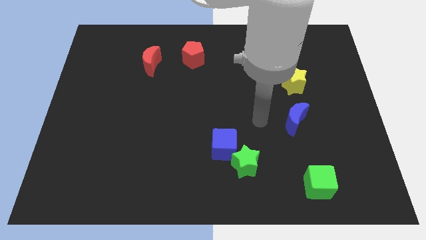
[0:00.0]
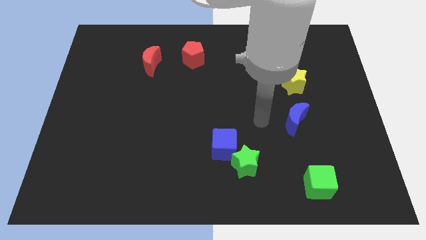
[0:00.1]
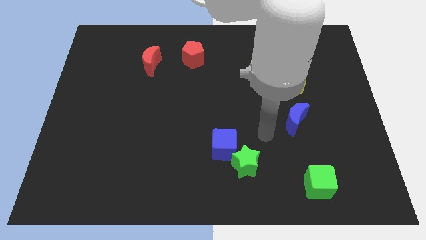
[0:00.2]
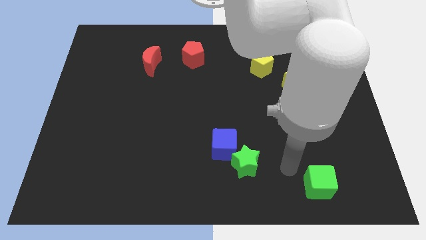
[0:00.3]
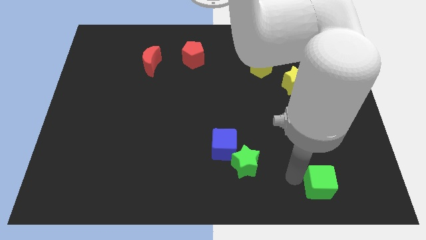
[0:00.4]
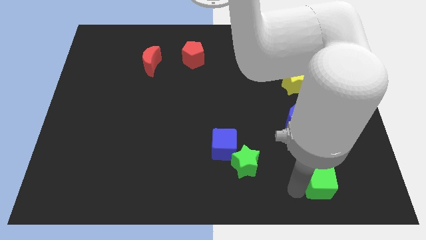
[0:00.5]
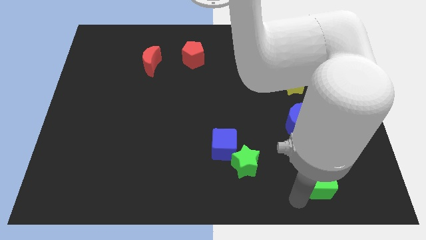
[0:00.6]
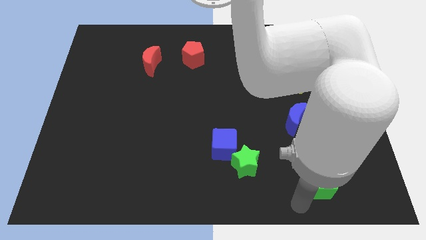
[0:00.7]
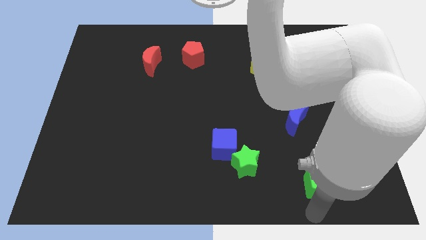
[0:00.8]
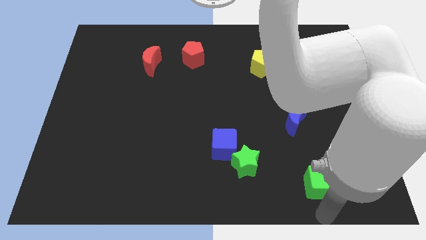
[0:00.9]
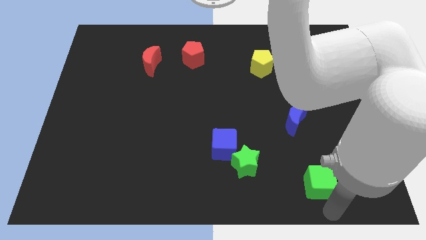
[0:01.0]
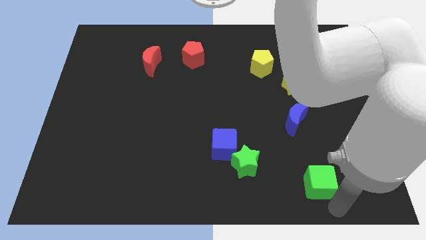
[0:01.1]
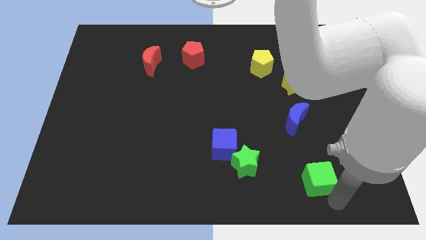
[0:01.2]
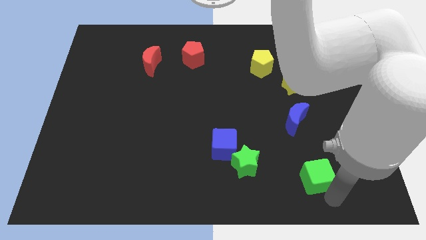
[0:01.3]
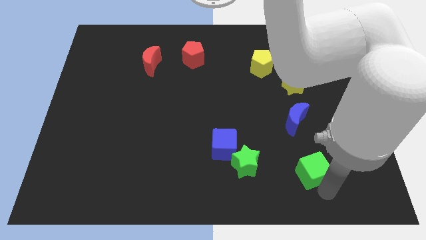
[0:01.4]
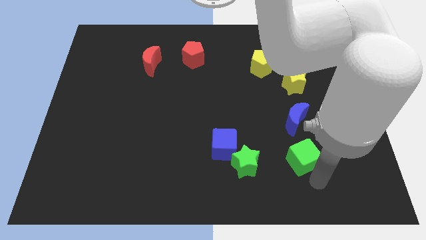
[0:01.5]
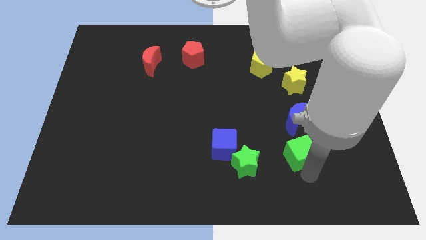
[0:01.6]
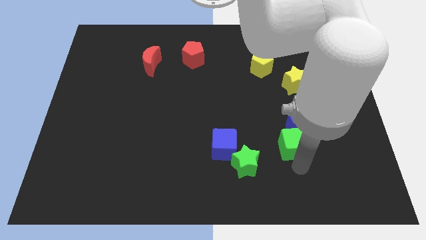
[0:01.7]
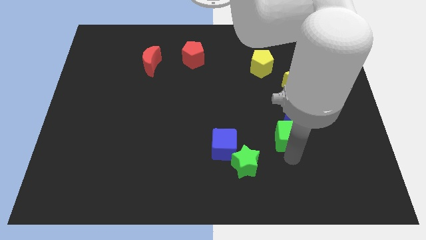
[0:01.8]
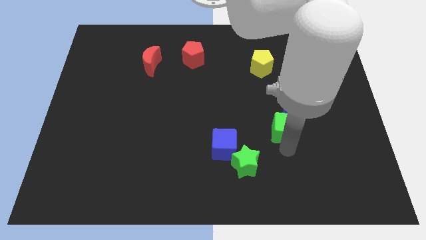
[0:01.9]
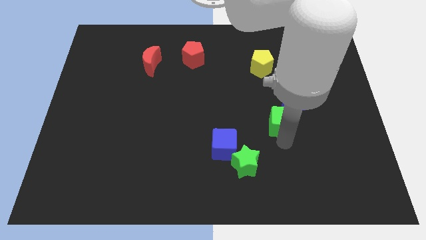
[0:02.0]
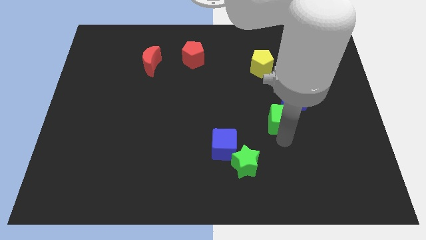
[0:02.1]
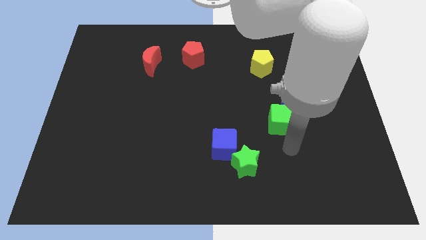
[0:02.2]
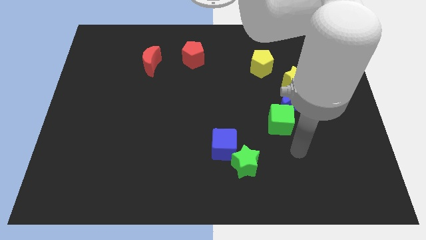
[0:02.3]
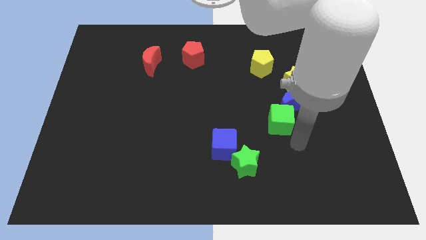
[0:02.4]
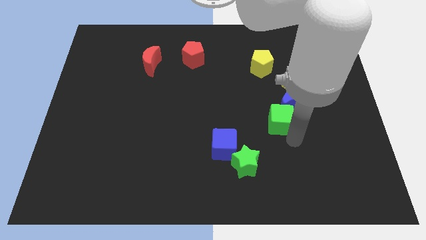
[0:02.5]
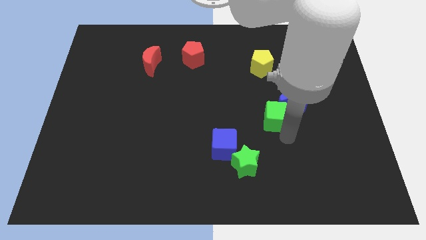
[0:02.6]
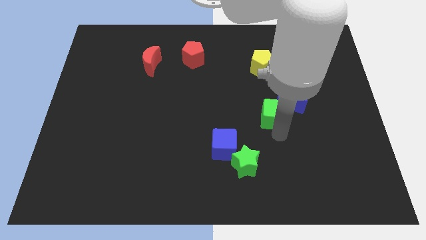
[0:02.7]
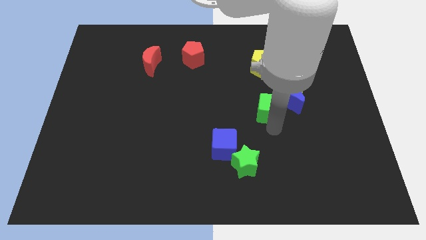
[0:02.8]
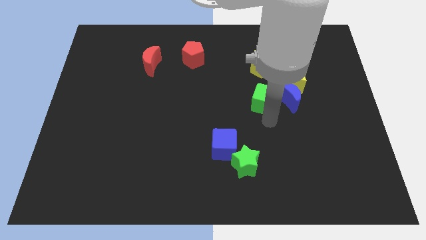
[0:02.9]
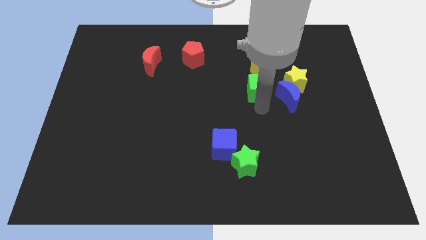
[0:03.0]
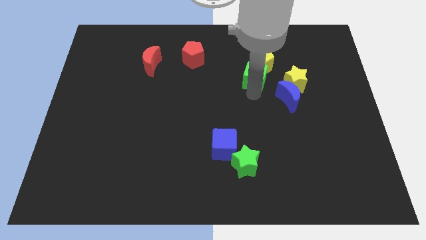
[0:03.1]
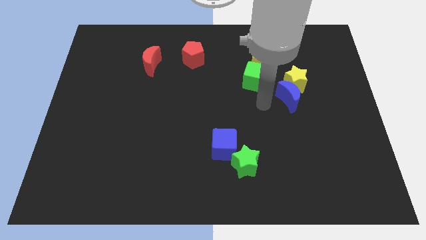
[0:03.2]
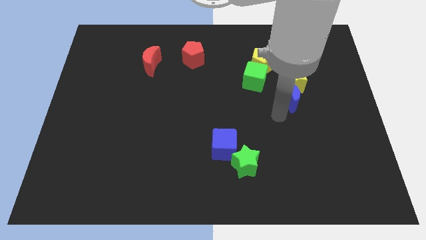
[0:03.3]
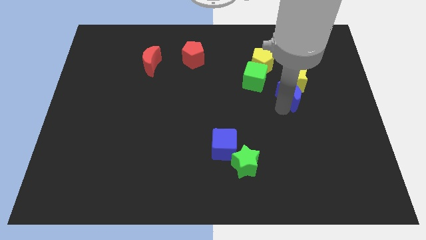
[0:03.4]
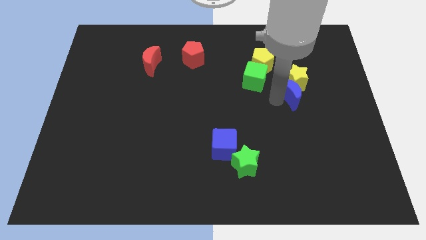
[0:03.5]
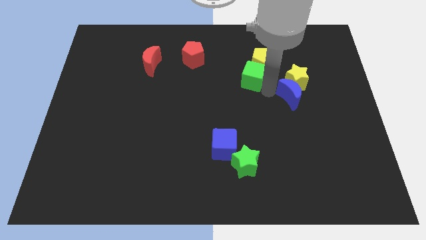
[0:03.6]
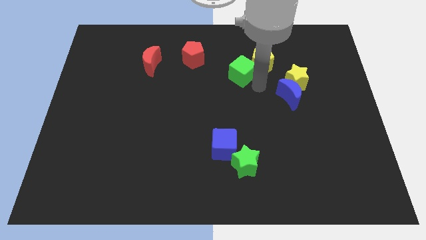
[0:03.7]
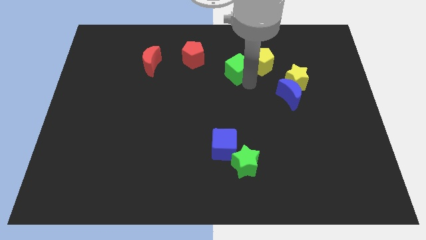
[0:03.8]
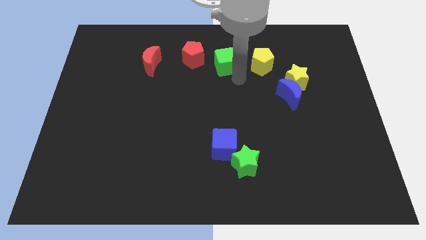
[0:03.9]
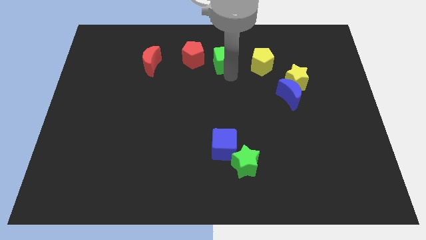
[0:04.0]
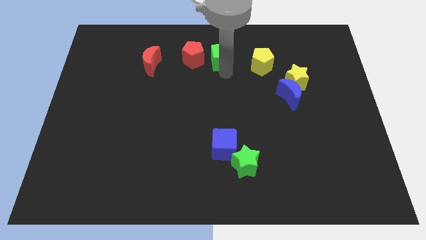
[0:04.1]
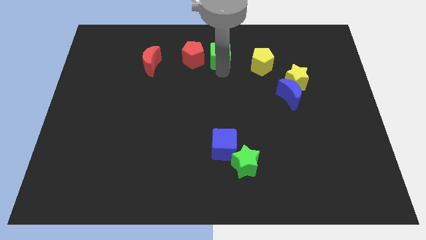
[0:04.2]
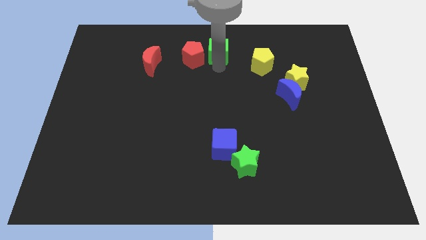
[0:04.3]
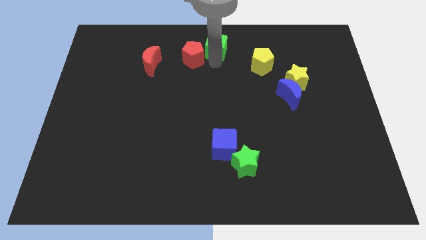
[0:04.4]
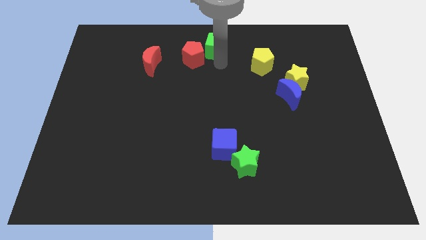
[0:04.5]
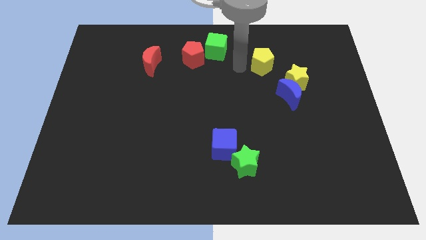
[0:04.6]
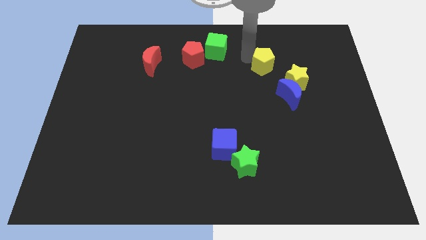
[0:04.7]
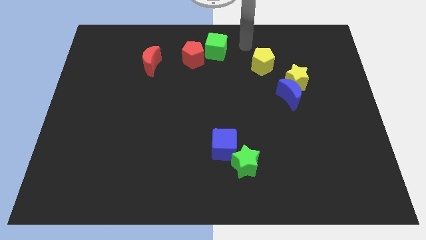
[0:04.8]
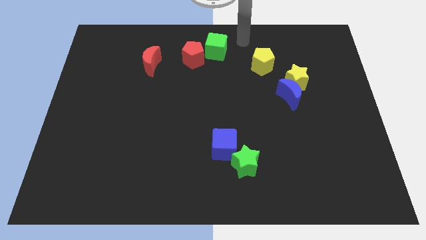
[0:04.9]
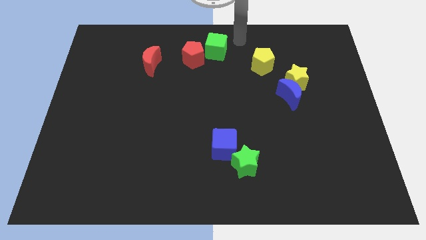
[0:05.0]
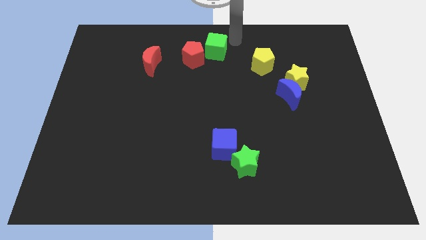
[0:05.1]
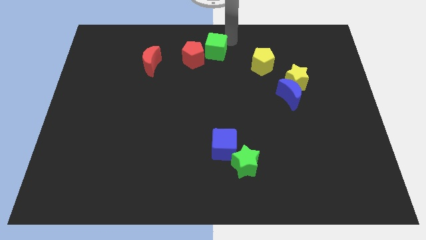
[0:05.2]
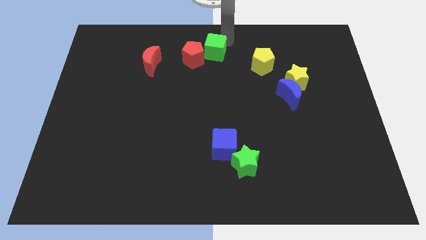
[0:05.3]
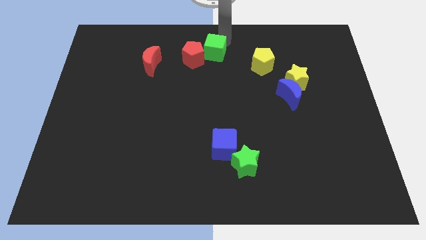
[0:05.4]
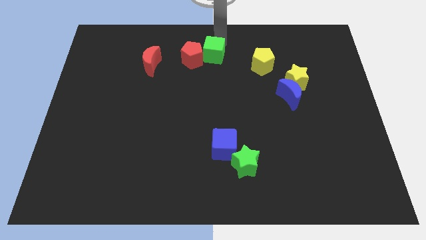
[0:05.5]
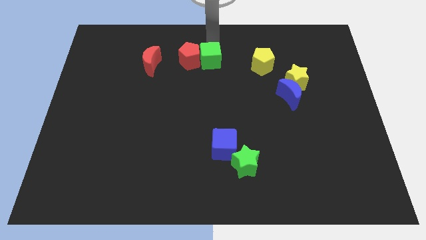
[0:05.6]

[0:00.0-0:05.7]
put the green cube next to the red pentagon

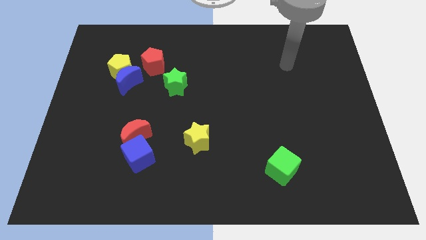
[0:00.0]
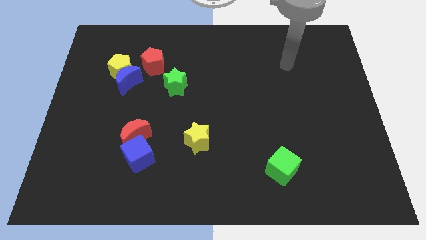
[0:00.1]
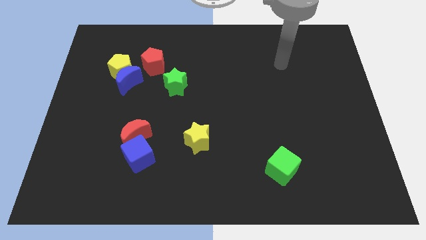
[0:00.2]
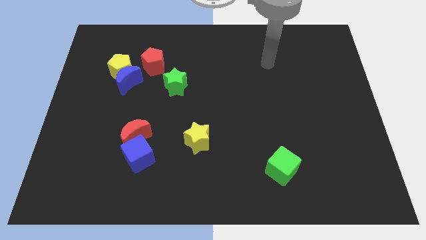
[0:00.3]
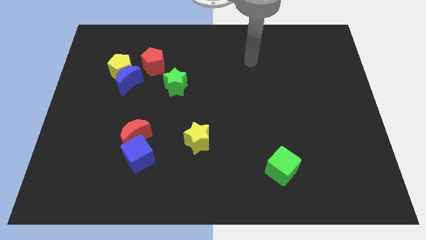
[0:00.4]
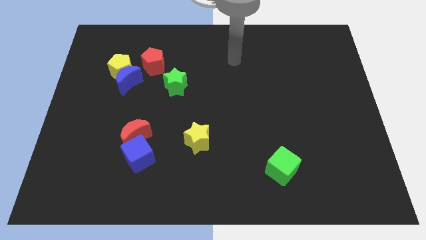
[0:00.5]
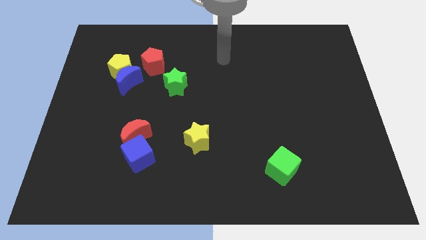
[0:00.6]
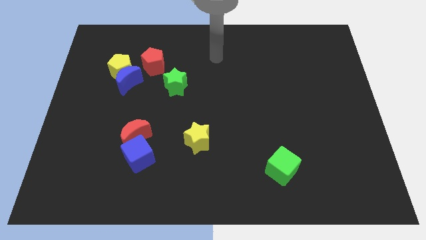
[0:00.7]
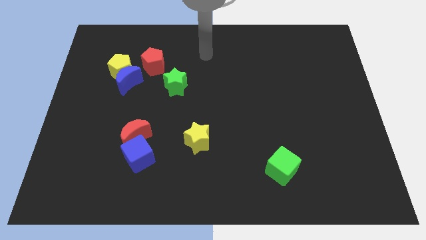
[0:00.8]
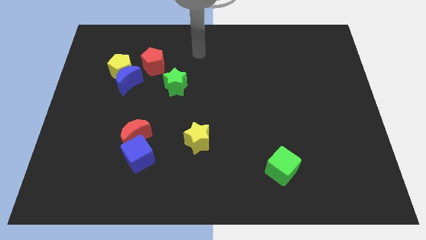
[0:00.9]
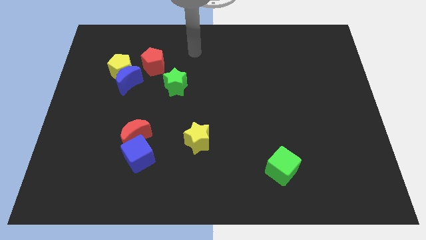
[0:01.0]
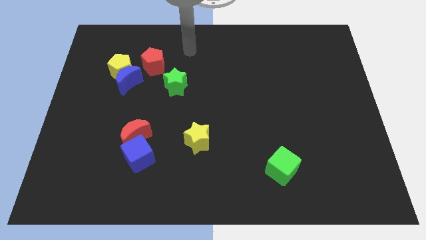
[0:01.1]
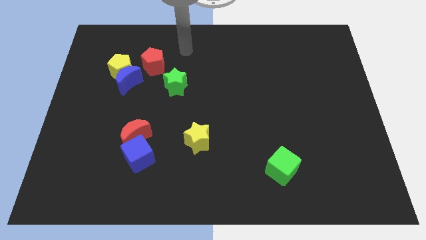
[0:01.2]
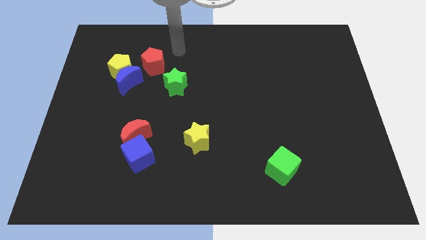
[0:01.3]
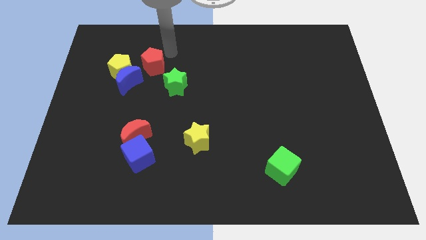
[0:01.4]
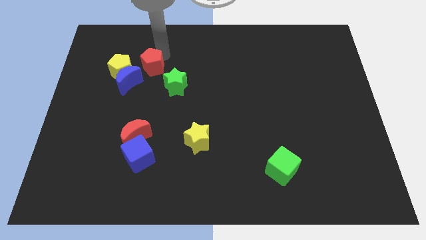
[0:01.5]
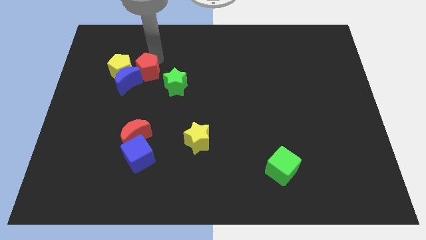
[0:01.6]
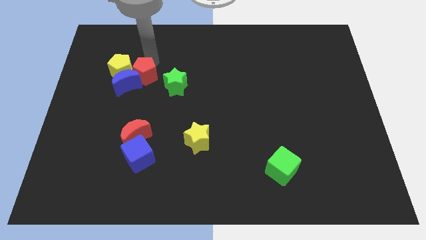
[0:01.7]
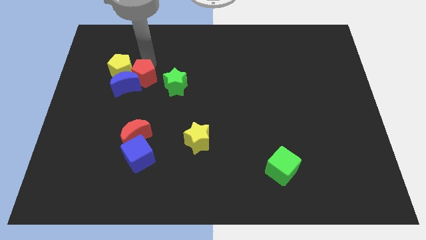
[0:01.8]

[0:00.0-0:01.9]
push the red pentagon close to the blue moon

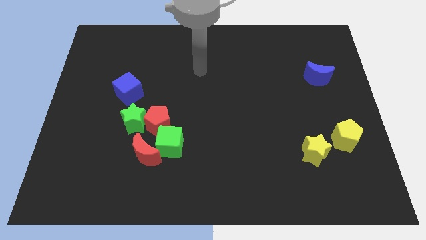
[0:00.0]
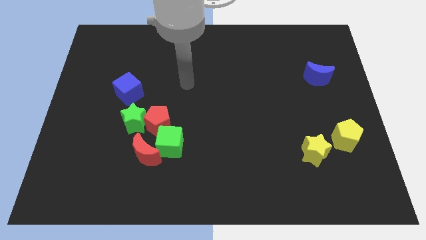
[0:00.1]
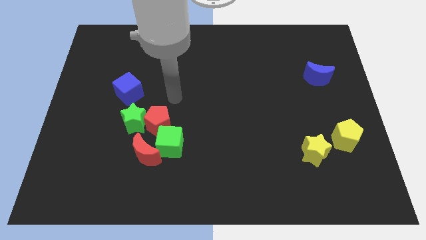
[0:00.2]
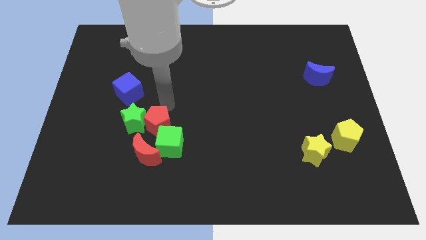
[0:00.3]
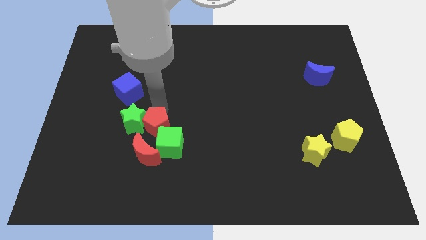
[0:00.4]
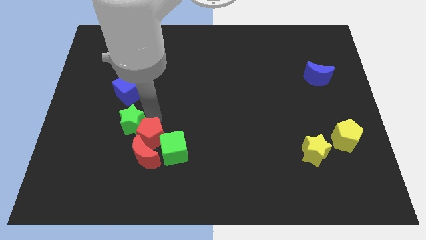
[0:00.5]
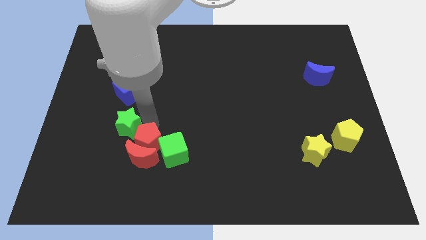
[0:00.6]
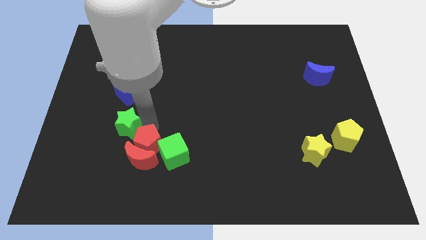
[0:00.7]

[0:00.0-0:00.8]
put the red pentagon next to the red moon
